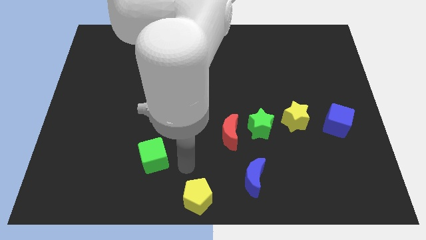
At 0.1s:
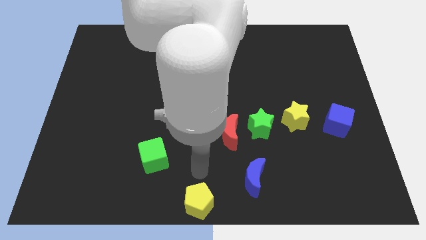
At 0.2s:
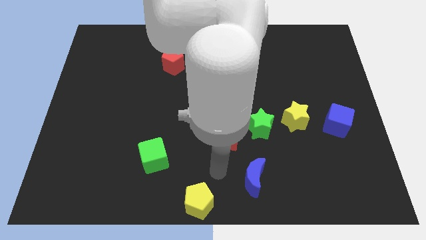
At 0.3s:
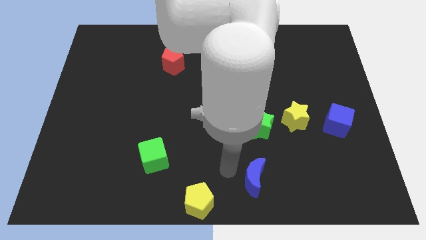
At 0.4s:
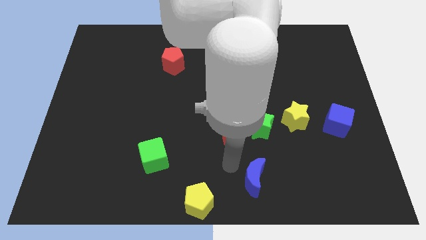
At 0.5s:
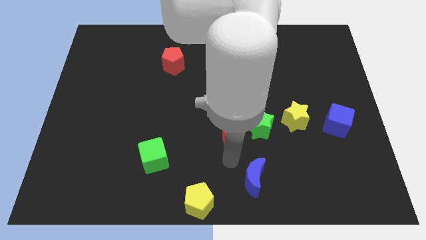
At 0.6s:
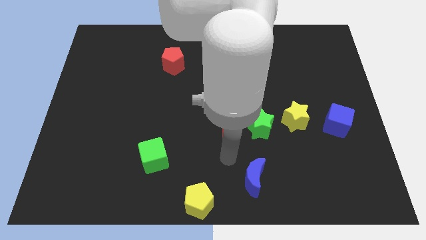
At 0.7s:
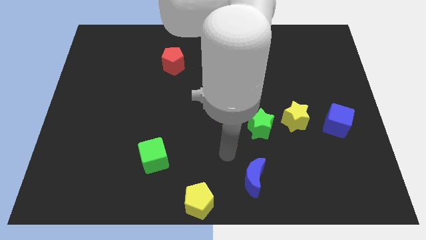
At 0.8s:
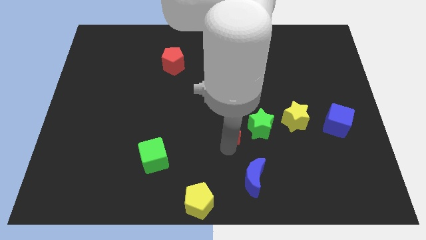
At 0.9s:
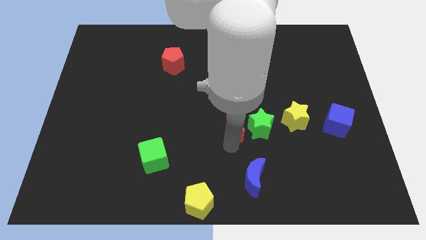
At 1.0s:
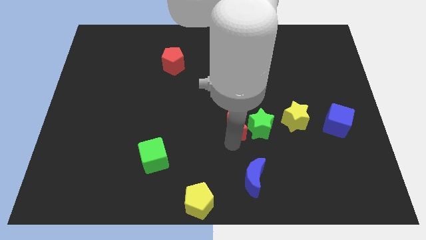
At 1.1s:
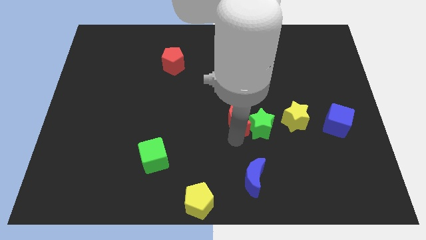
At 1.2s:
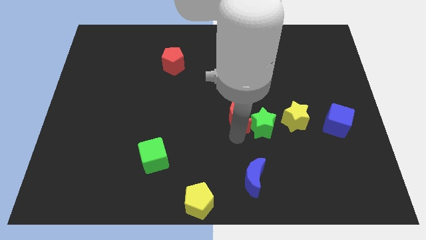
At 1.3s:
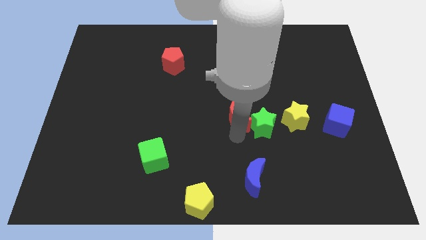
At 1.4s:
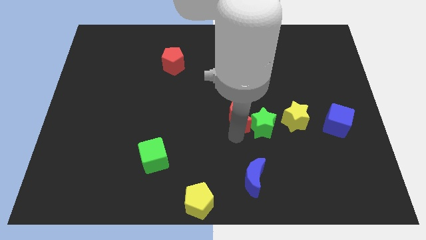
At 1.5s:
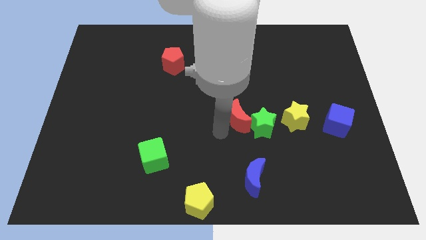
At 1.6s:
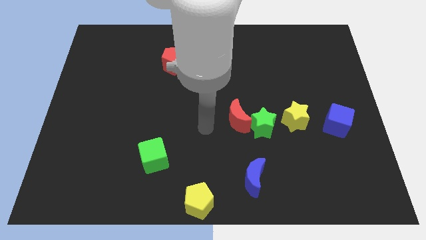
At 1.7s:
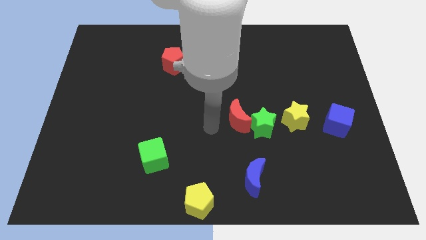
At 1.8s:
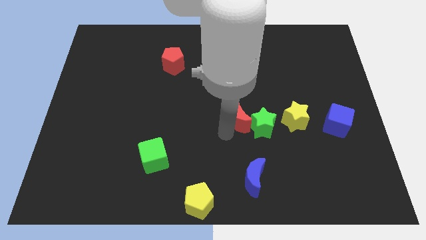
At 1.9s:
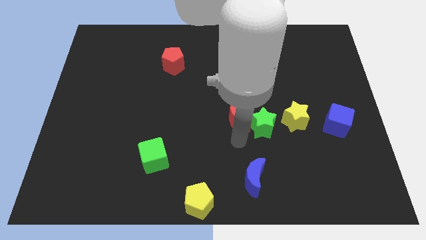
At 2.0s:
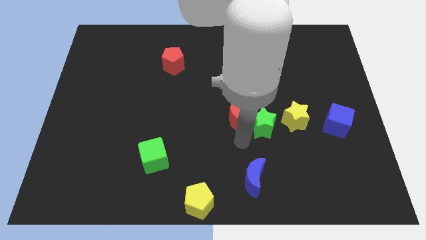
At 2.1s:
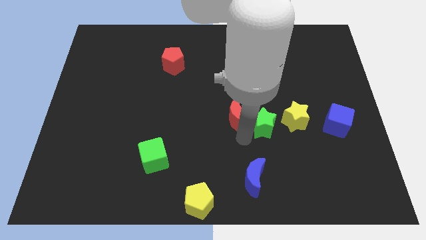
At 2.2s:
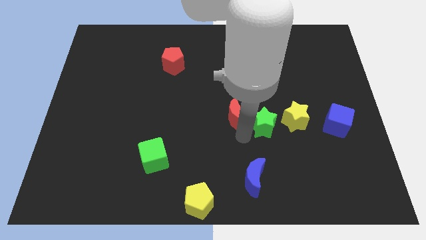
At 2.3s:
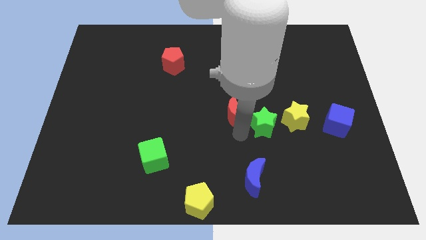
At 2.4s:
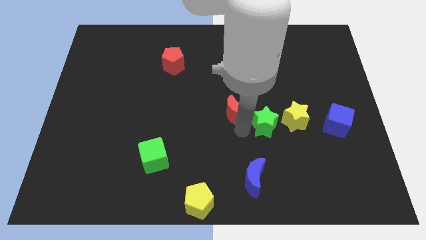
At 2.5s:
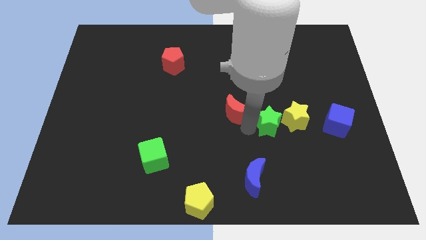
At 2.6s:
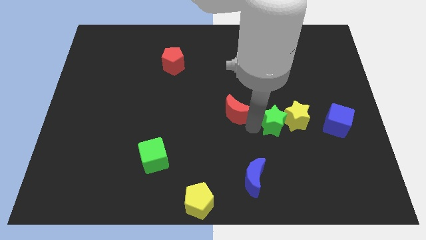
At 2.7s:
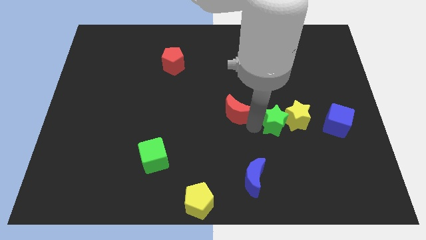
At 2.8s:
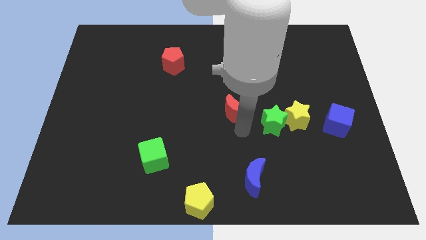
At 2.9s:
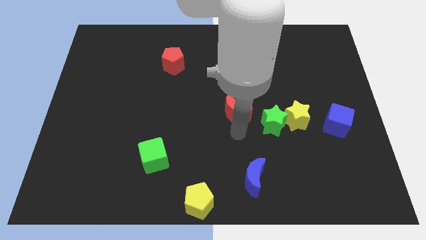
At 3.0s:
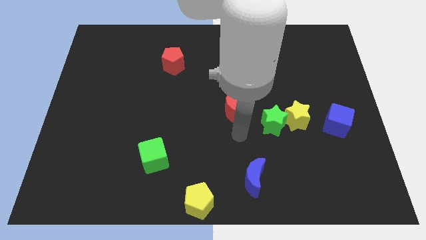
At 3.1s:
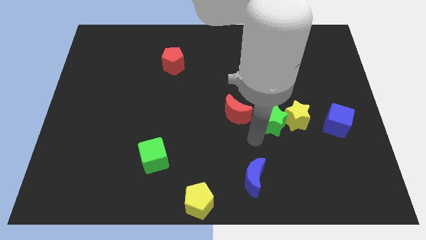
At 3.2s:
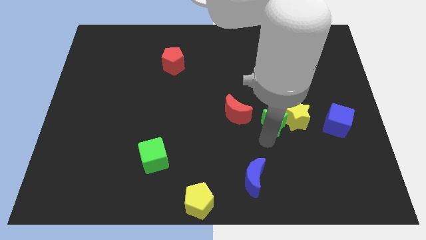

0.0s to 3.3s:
move the red moon away from the green star

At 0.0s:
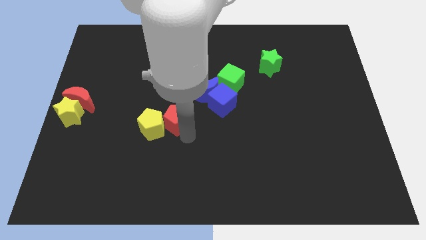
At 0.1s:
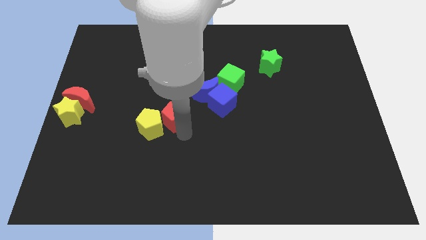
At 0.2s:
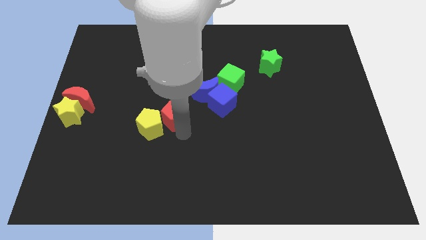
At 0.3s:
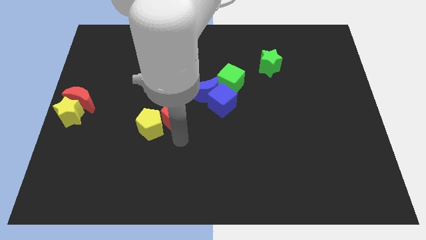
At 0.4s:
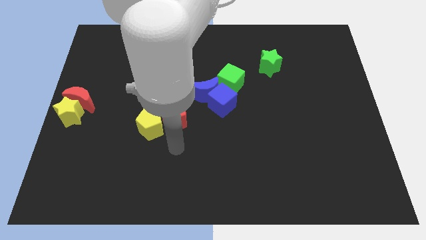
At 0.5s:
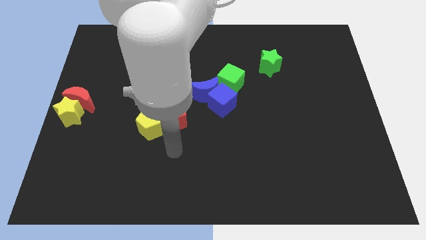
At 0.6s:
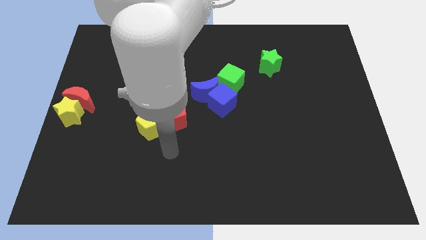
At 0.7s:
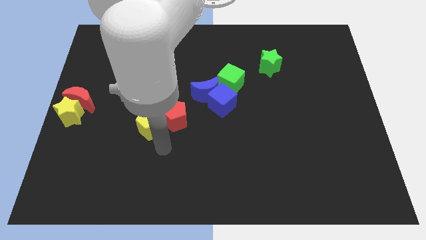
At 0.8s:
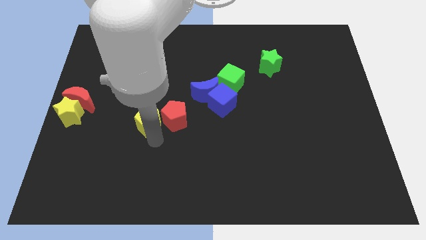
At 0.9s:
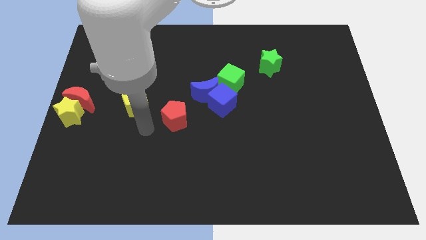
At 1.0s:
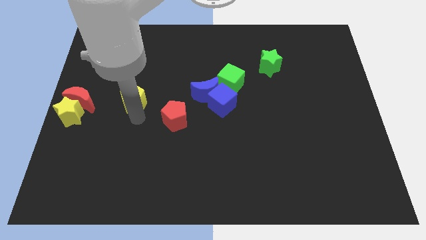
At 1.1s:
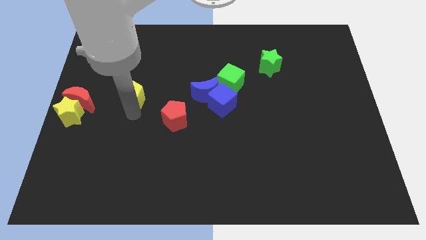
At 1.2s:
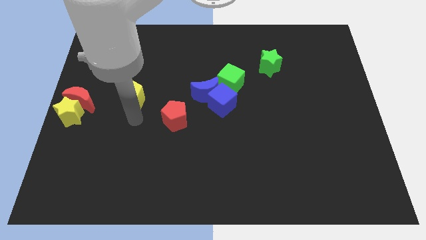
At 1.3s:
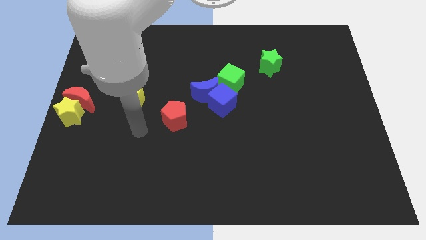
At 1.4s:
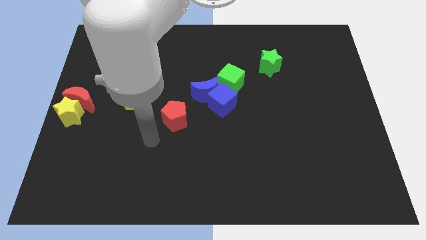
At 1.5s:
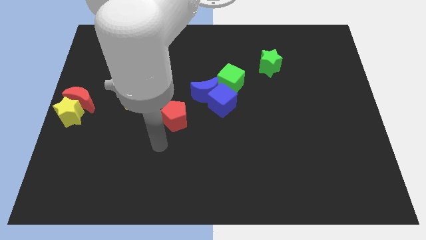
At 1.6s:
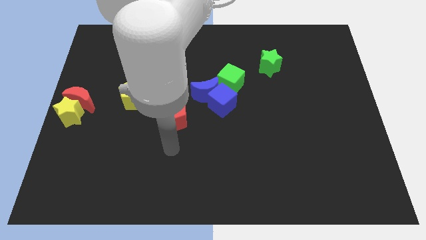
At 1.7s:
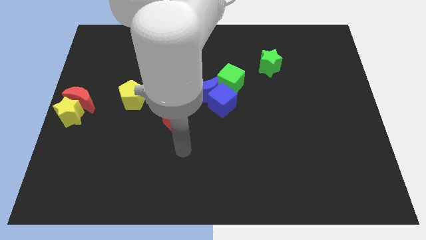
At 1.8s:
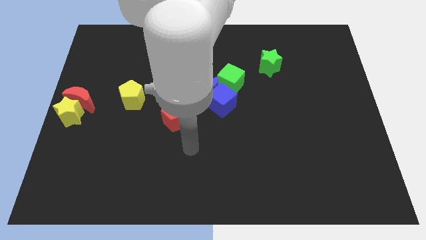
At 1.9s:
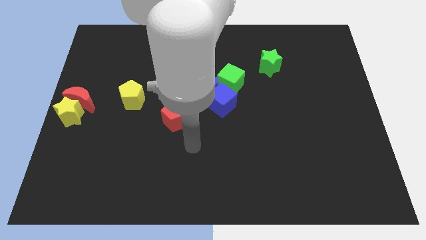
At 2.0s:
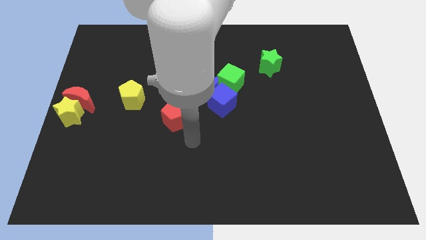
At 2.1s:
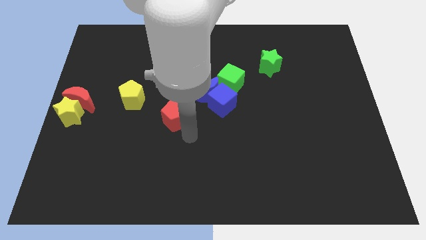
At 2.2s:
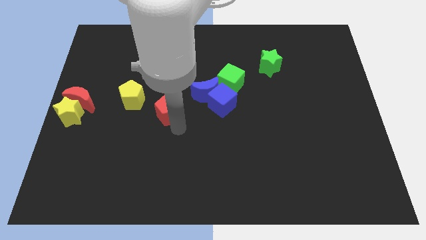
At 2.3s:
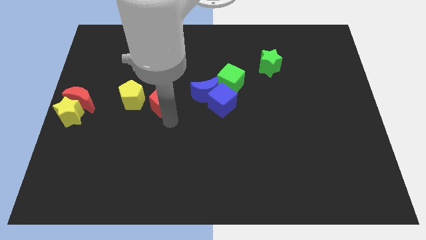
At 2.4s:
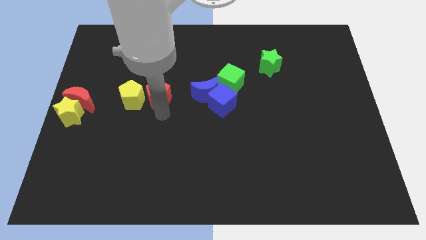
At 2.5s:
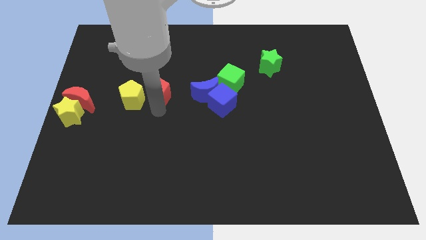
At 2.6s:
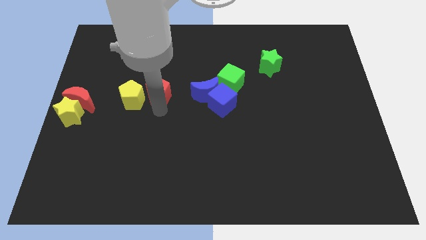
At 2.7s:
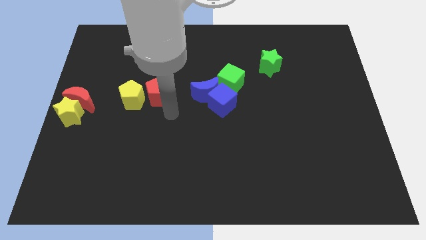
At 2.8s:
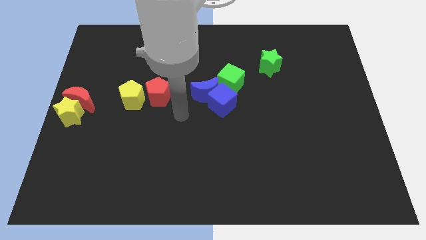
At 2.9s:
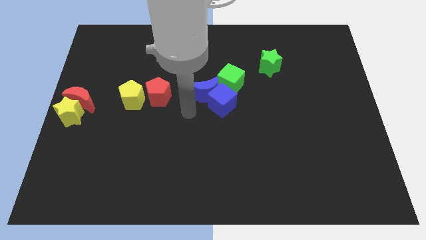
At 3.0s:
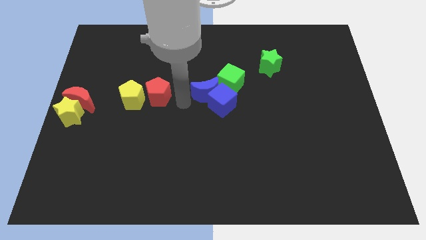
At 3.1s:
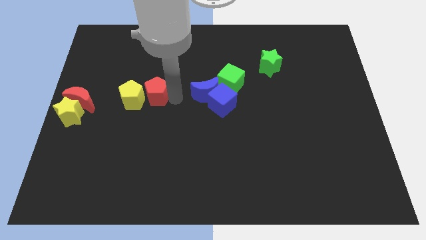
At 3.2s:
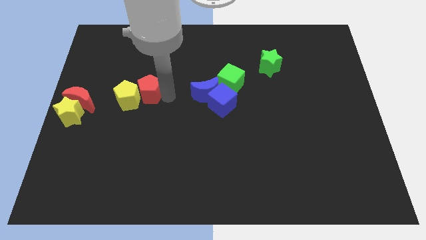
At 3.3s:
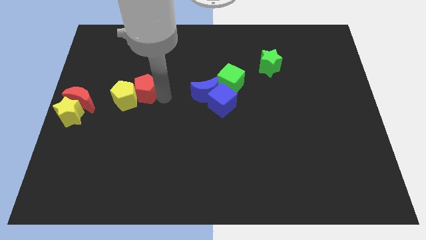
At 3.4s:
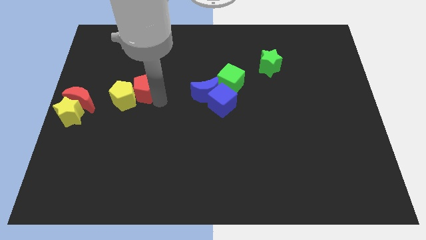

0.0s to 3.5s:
move the pentagons towards the top left of the board

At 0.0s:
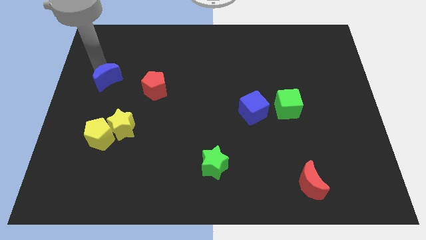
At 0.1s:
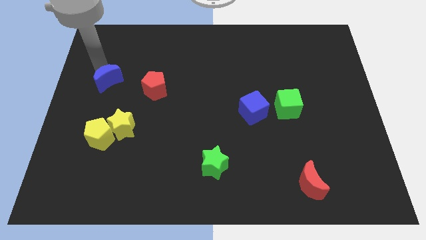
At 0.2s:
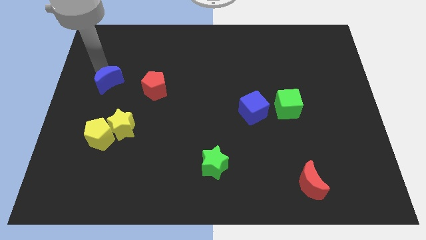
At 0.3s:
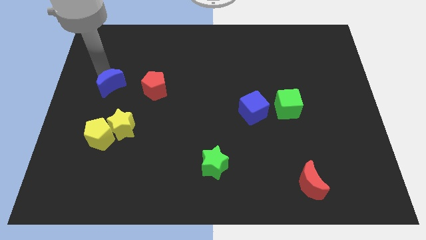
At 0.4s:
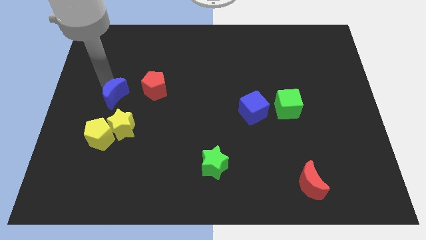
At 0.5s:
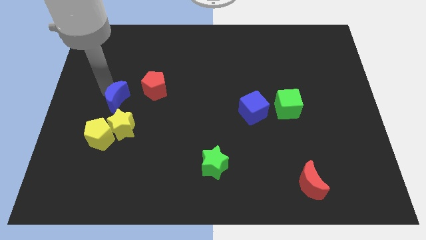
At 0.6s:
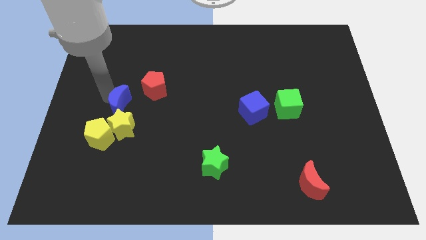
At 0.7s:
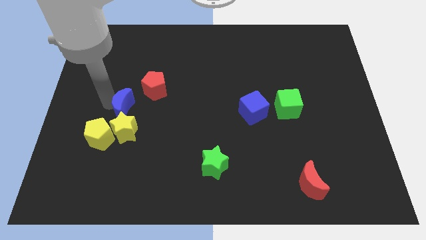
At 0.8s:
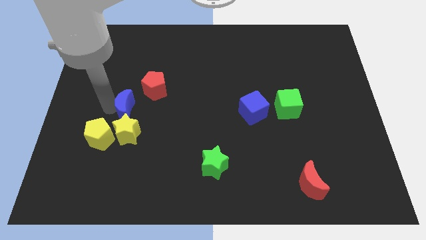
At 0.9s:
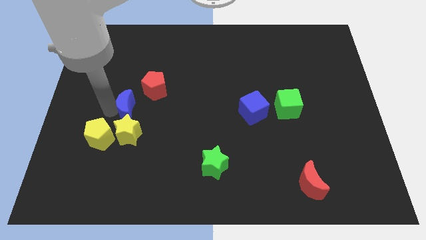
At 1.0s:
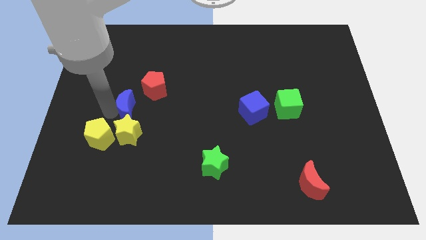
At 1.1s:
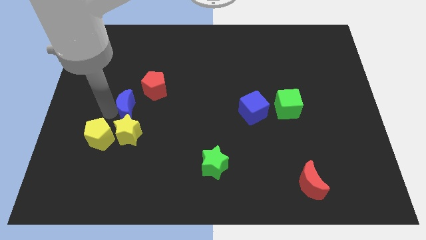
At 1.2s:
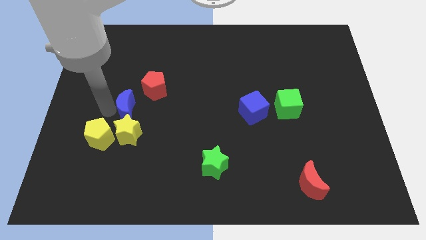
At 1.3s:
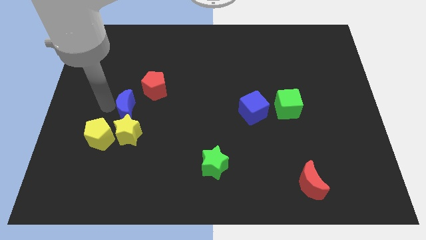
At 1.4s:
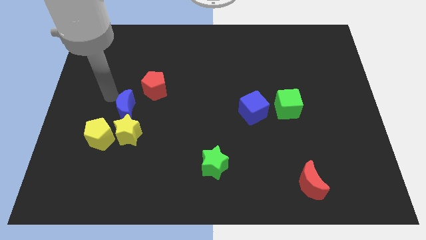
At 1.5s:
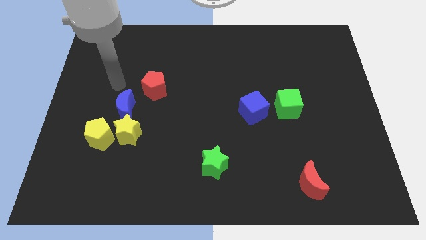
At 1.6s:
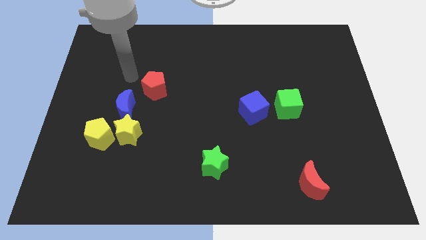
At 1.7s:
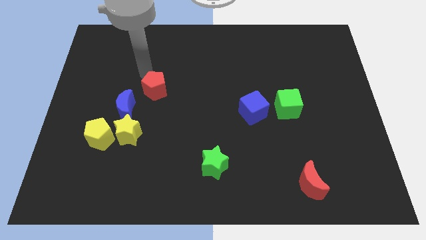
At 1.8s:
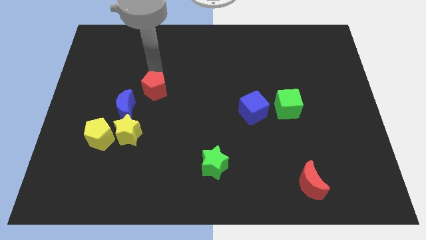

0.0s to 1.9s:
push the blue moon into the yellow star

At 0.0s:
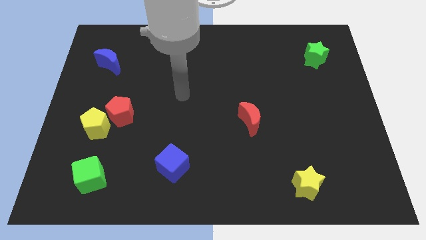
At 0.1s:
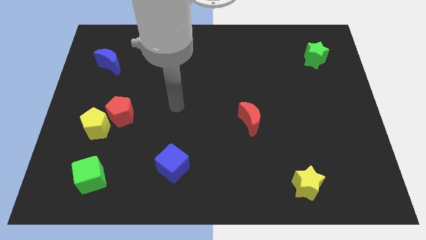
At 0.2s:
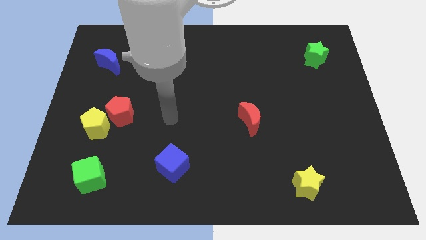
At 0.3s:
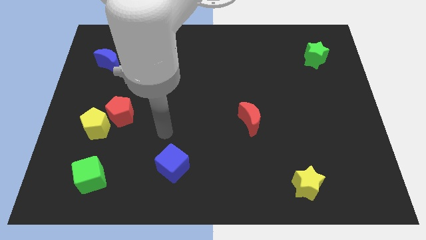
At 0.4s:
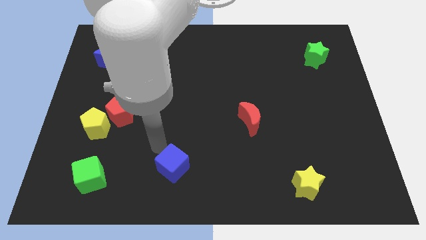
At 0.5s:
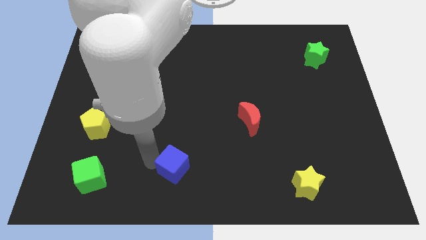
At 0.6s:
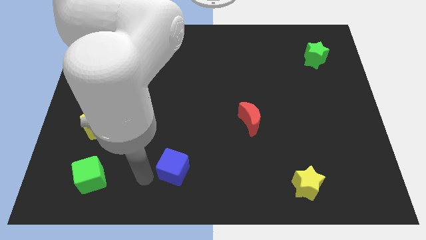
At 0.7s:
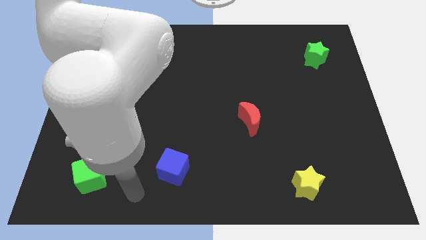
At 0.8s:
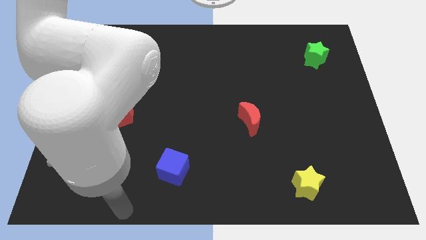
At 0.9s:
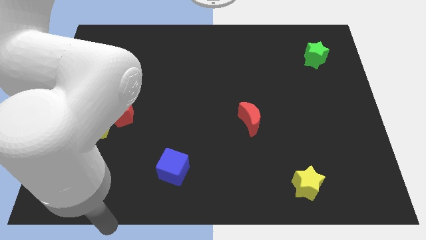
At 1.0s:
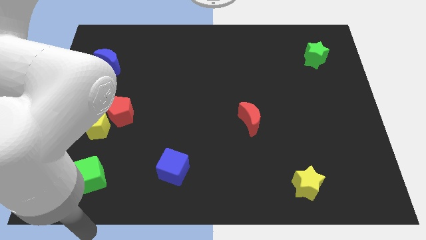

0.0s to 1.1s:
slide your arm to the left bottom side of the board
